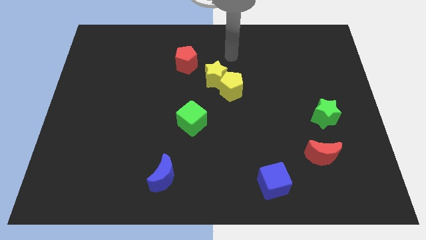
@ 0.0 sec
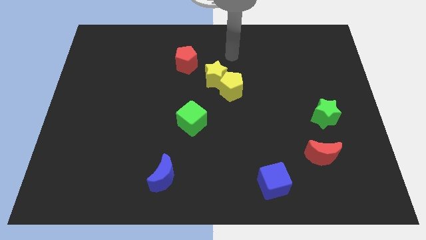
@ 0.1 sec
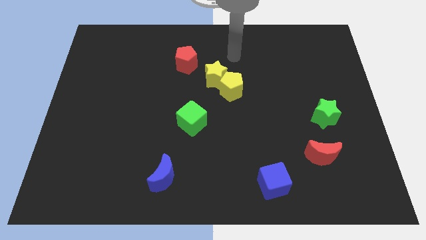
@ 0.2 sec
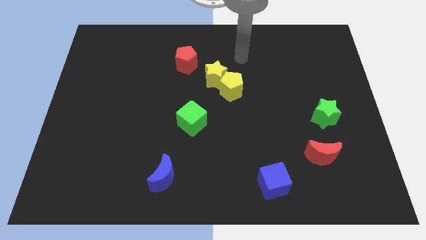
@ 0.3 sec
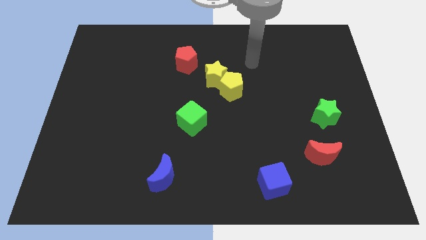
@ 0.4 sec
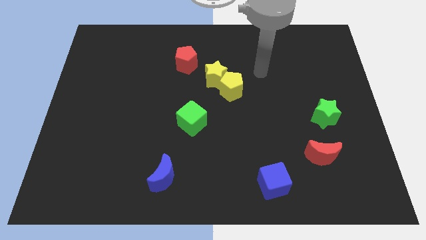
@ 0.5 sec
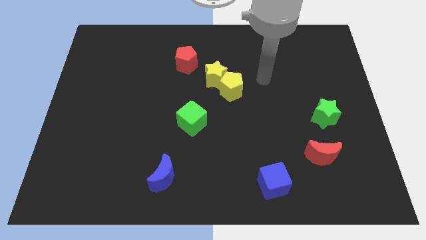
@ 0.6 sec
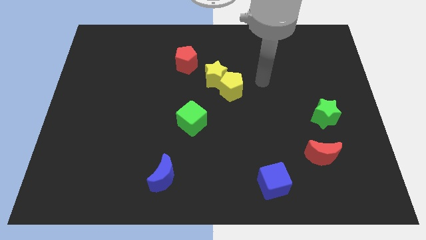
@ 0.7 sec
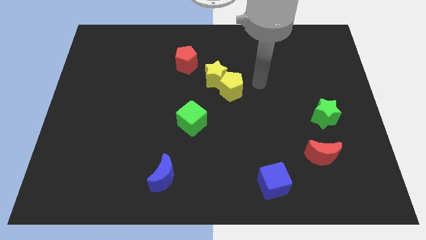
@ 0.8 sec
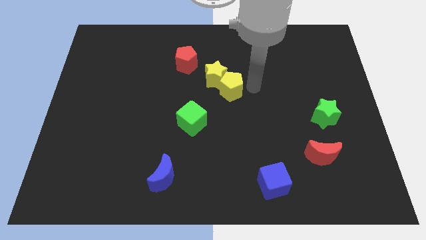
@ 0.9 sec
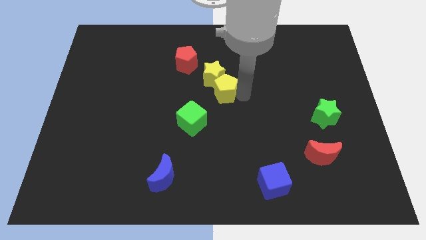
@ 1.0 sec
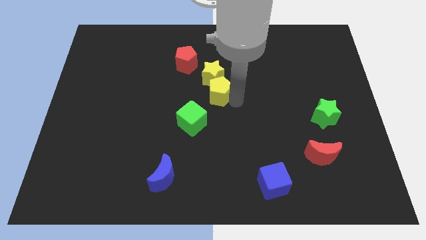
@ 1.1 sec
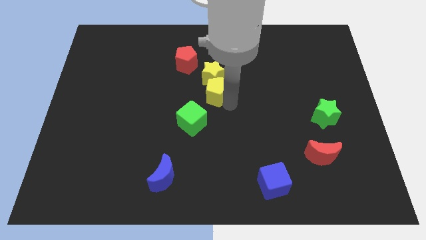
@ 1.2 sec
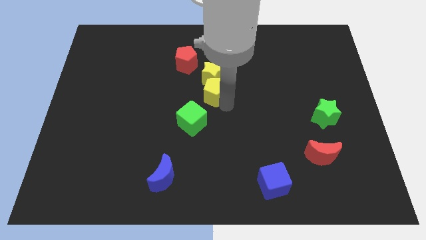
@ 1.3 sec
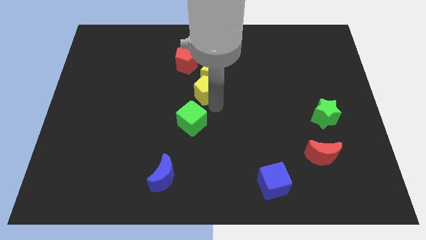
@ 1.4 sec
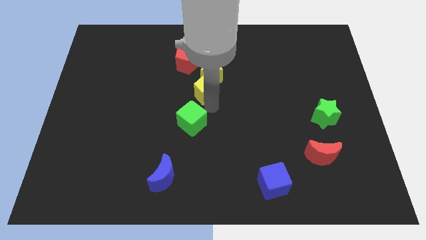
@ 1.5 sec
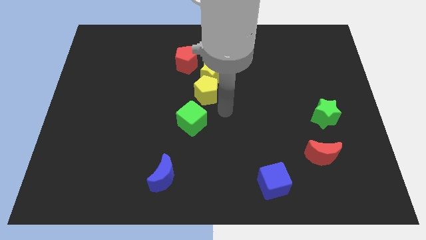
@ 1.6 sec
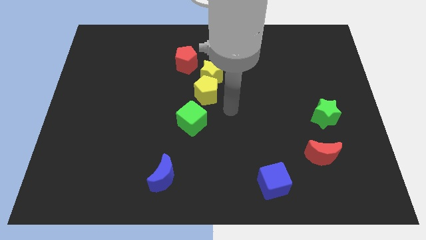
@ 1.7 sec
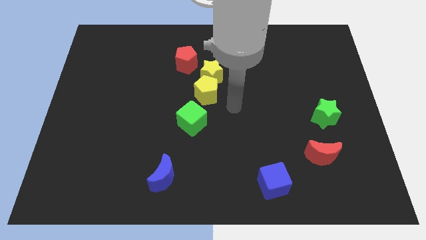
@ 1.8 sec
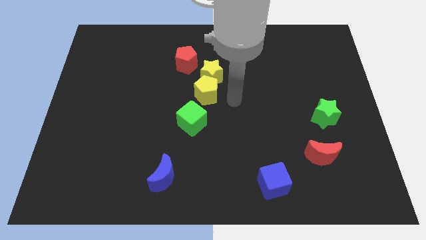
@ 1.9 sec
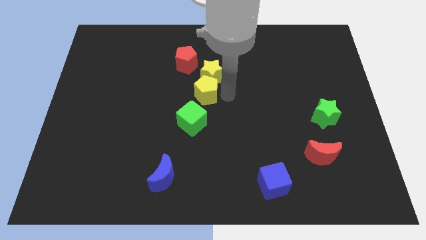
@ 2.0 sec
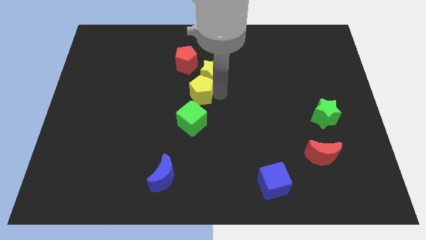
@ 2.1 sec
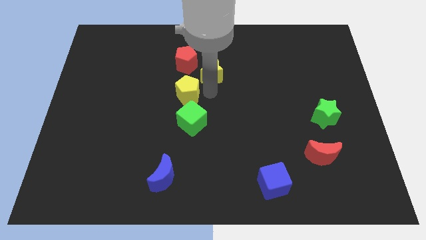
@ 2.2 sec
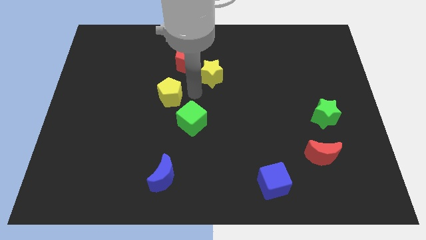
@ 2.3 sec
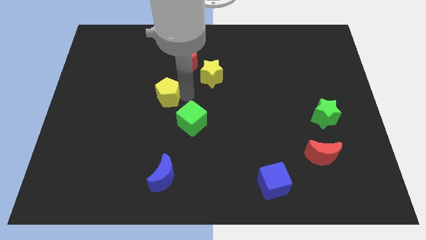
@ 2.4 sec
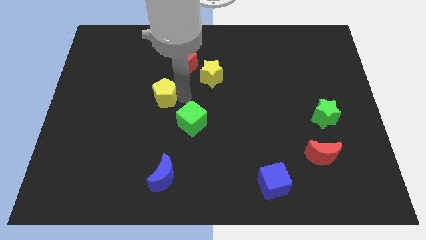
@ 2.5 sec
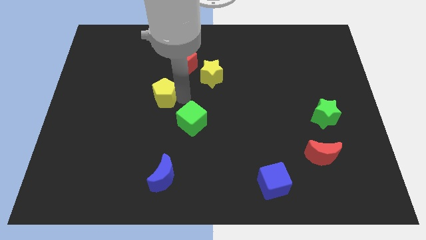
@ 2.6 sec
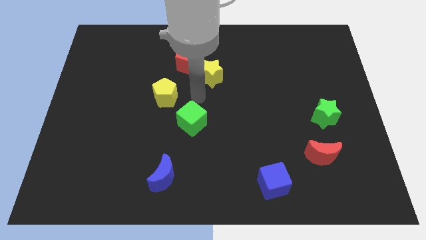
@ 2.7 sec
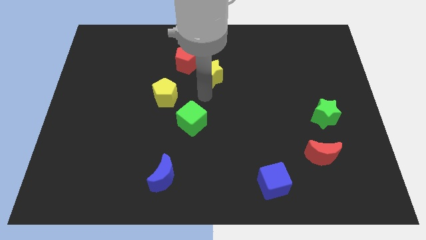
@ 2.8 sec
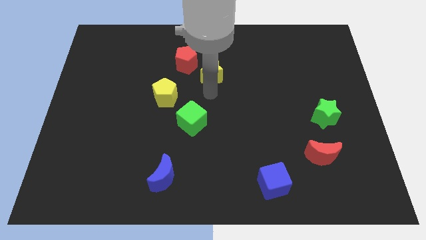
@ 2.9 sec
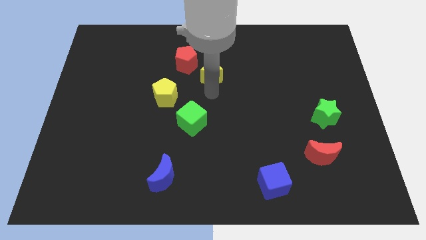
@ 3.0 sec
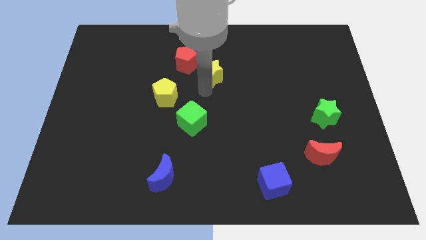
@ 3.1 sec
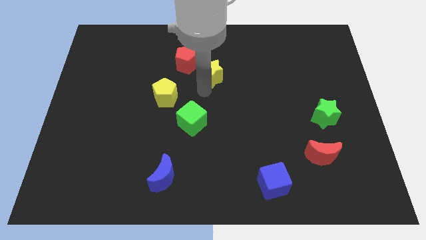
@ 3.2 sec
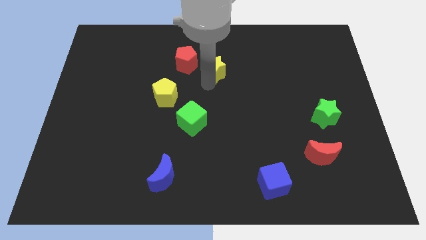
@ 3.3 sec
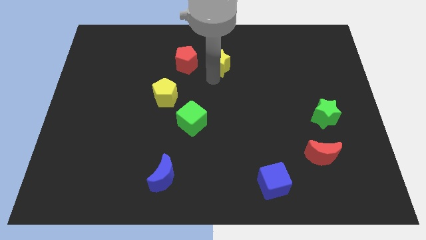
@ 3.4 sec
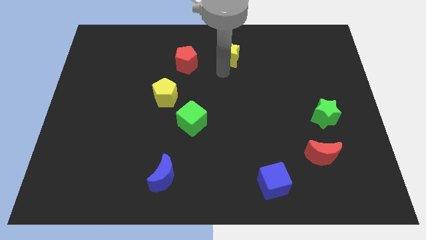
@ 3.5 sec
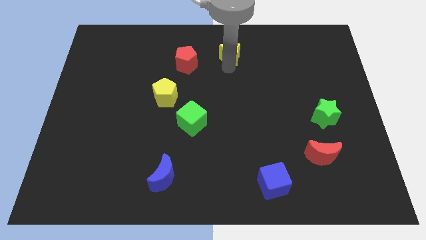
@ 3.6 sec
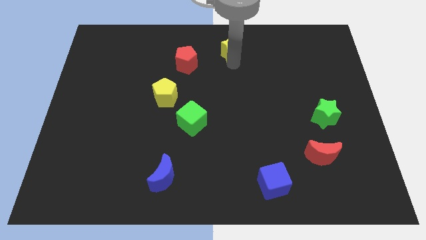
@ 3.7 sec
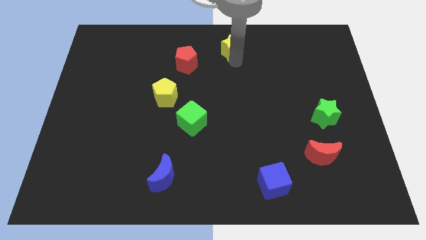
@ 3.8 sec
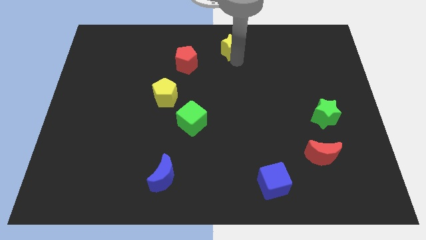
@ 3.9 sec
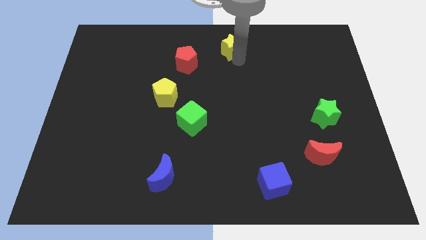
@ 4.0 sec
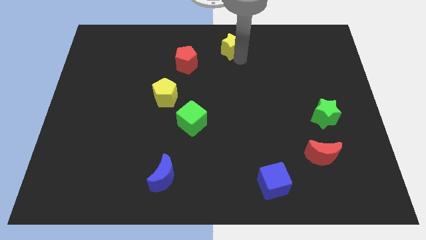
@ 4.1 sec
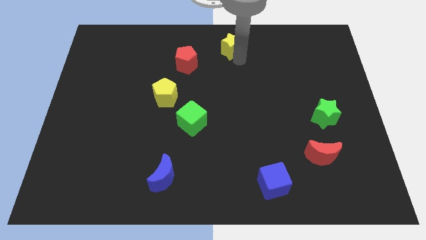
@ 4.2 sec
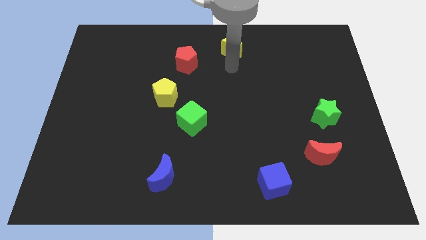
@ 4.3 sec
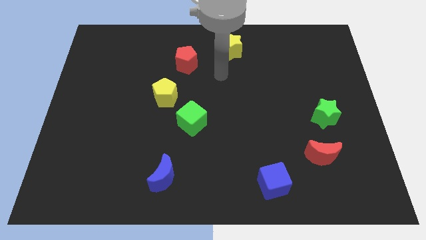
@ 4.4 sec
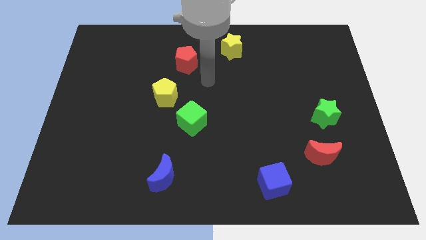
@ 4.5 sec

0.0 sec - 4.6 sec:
separate the yellow pentagon and the yellow star

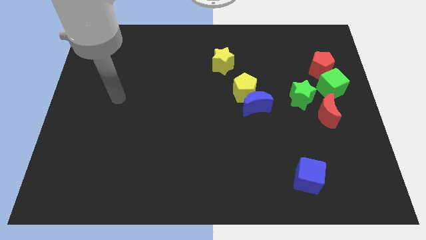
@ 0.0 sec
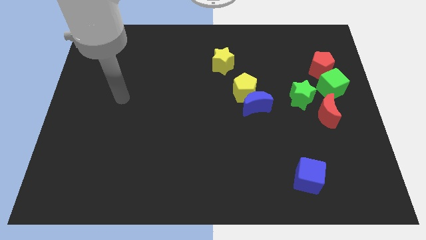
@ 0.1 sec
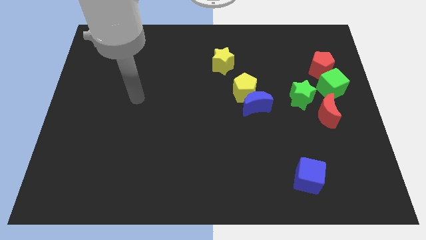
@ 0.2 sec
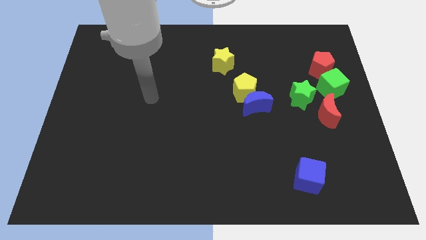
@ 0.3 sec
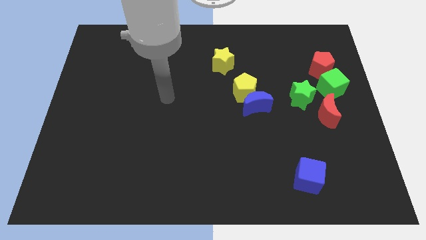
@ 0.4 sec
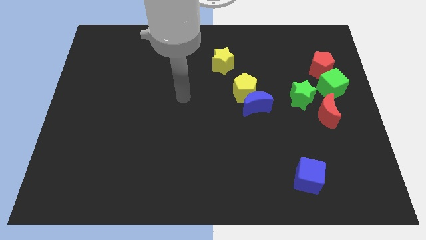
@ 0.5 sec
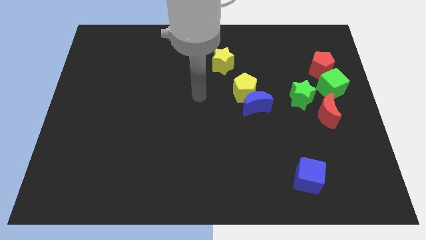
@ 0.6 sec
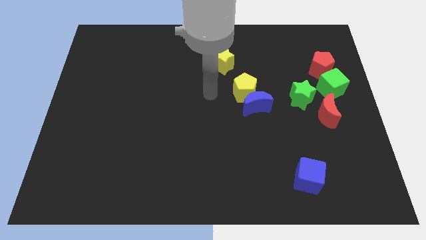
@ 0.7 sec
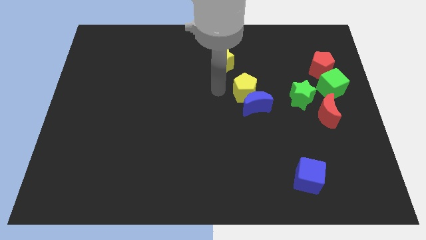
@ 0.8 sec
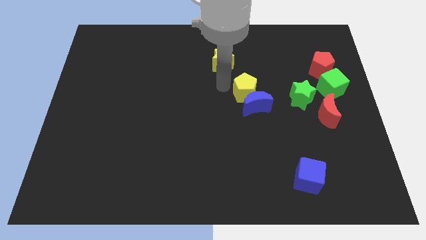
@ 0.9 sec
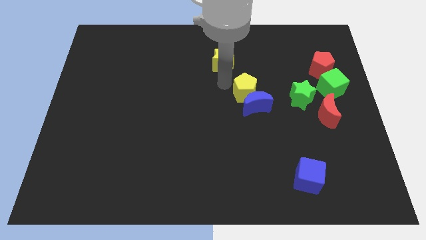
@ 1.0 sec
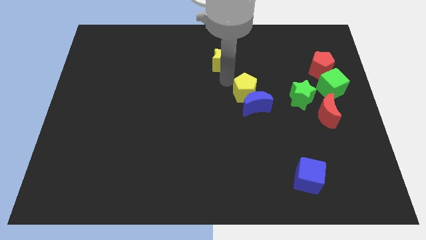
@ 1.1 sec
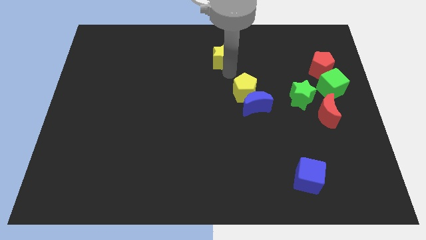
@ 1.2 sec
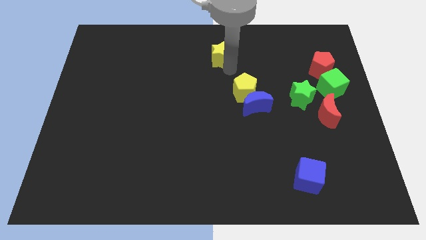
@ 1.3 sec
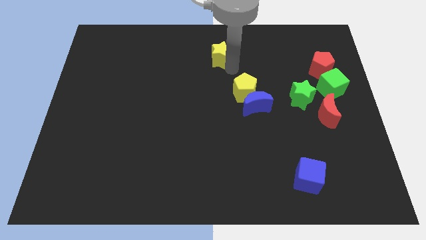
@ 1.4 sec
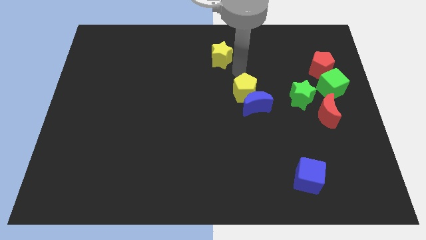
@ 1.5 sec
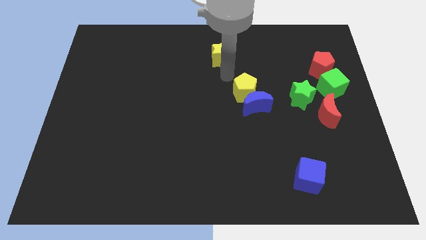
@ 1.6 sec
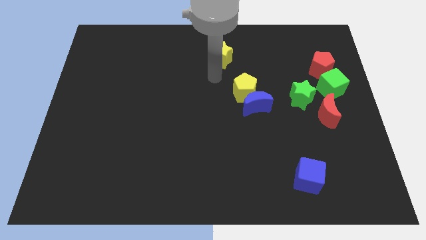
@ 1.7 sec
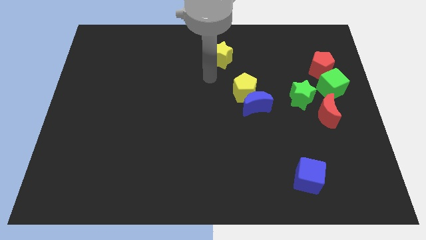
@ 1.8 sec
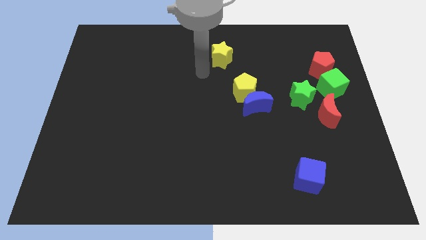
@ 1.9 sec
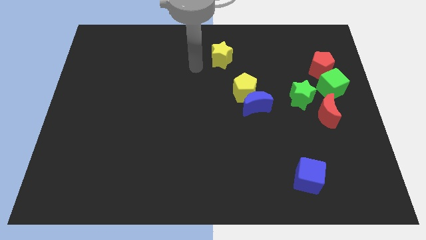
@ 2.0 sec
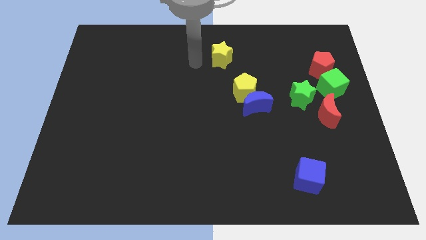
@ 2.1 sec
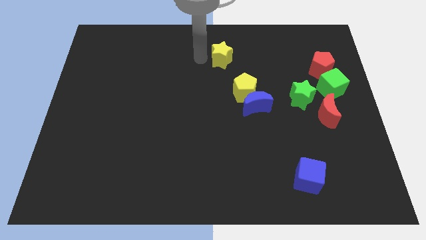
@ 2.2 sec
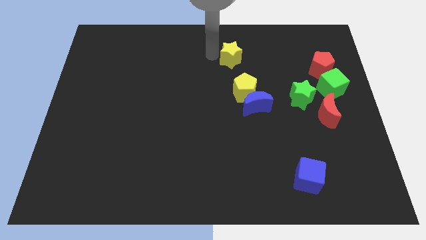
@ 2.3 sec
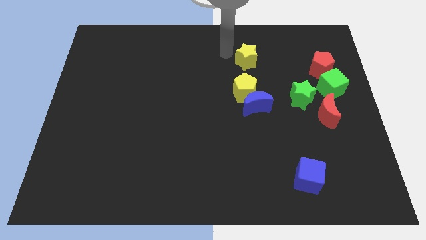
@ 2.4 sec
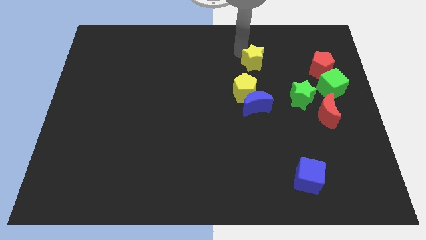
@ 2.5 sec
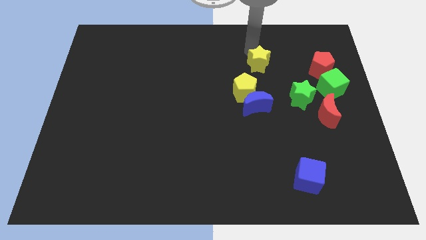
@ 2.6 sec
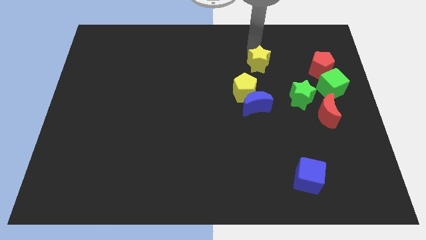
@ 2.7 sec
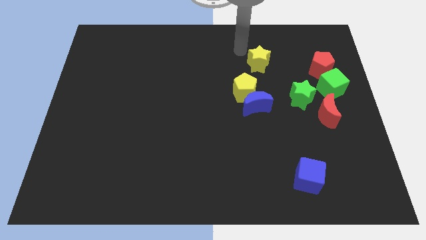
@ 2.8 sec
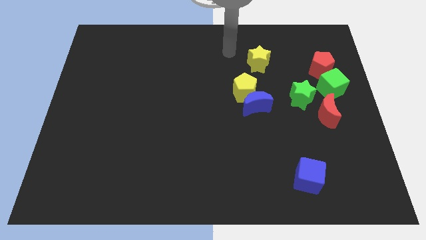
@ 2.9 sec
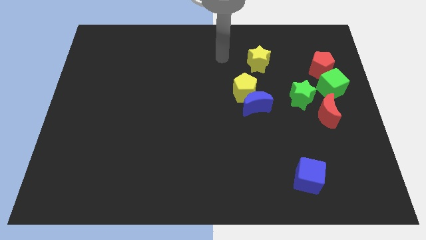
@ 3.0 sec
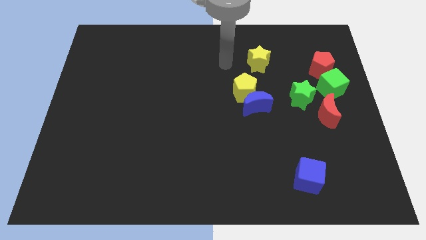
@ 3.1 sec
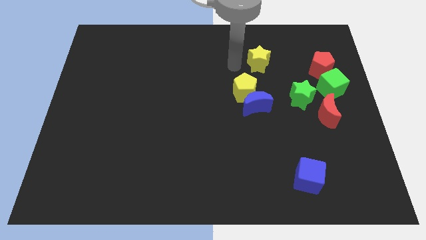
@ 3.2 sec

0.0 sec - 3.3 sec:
push yellow star to the right top

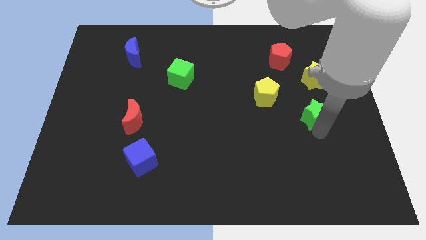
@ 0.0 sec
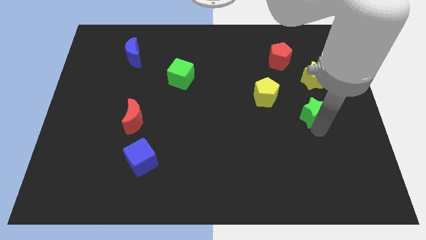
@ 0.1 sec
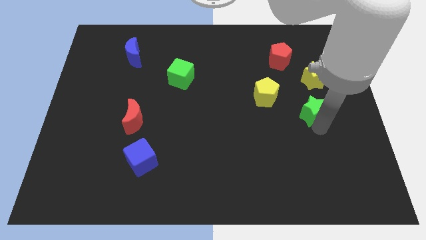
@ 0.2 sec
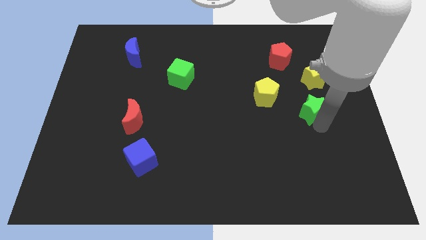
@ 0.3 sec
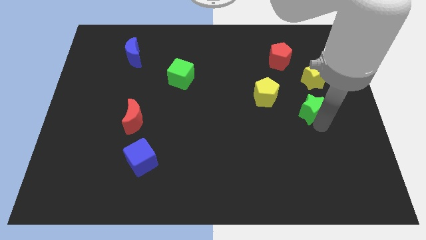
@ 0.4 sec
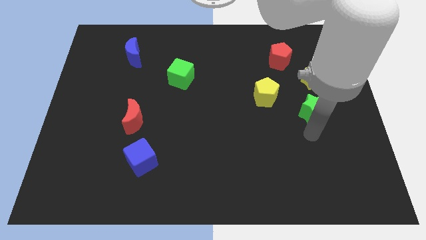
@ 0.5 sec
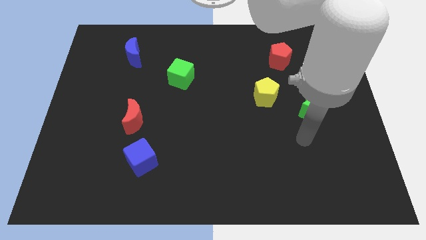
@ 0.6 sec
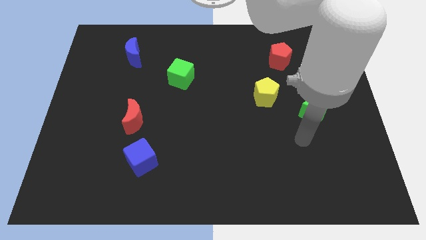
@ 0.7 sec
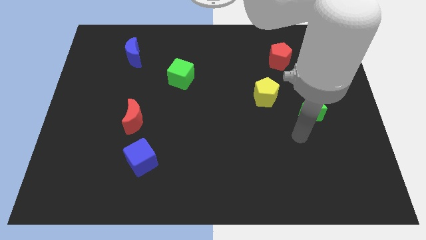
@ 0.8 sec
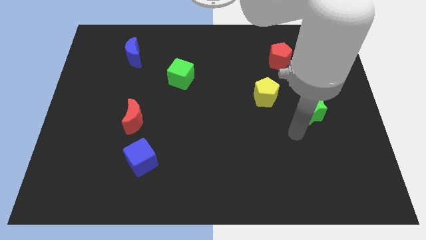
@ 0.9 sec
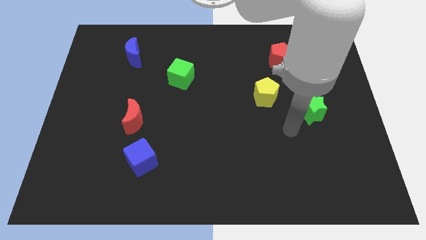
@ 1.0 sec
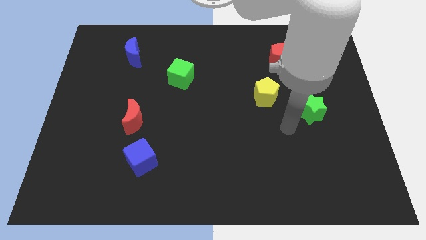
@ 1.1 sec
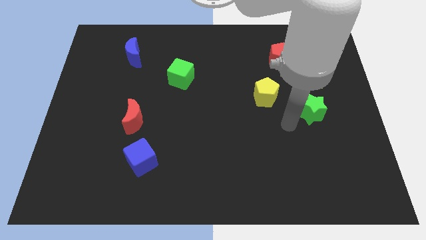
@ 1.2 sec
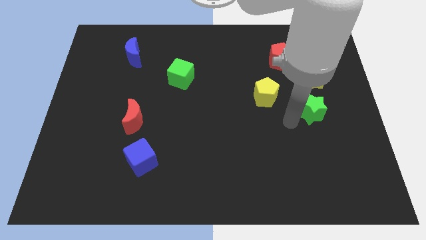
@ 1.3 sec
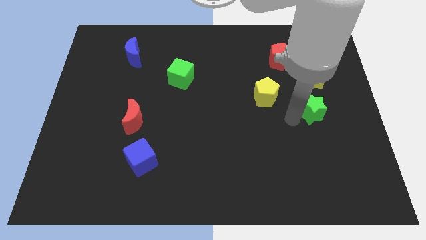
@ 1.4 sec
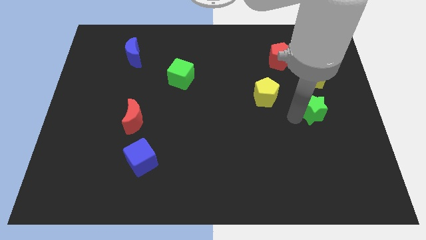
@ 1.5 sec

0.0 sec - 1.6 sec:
place the green star below the yellow star
